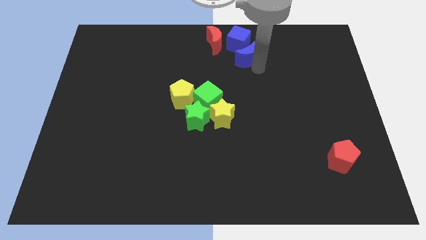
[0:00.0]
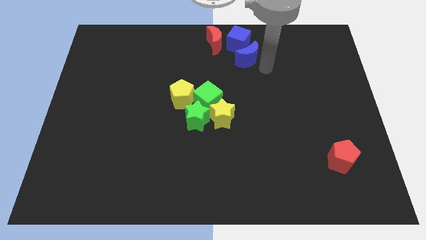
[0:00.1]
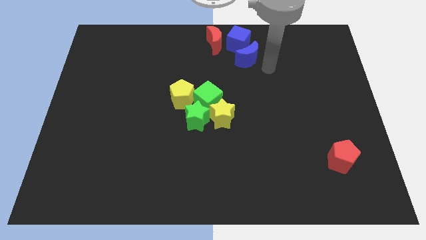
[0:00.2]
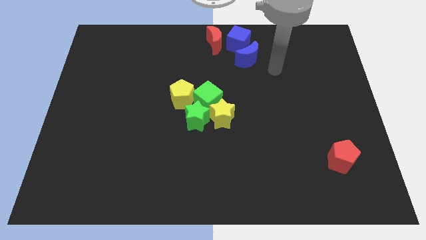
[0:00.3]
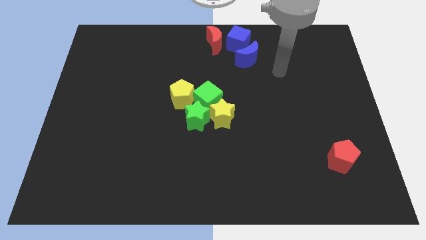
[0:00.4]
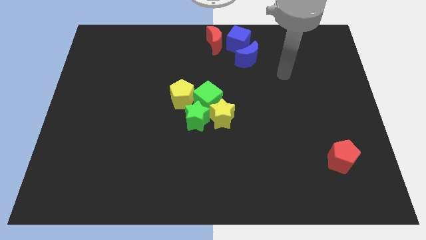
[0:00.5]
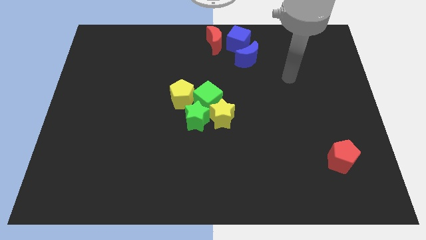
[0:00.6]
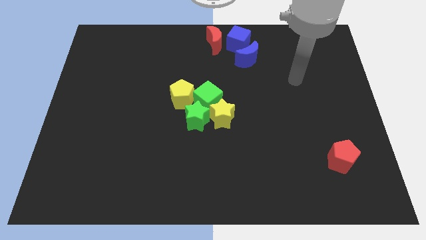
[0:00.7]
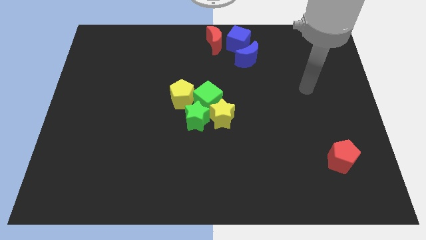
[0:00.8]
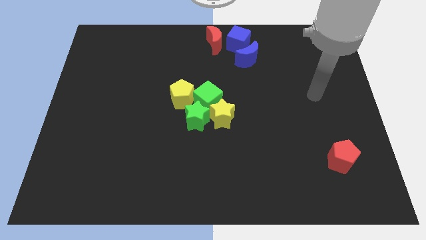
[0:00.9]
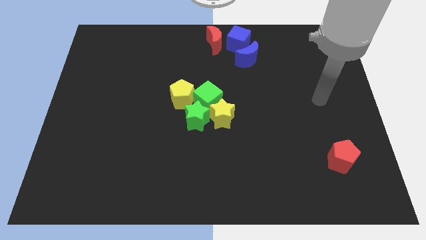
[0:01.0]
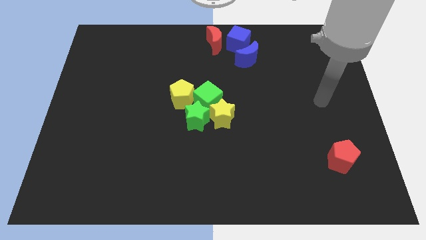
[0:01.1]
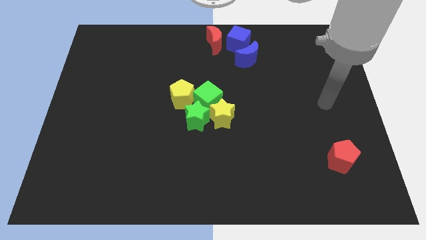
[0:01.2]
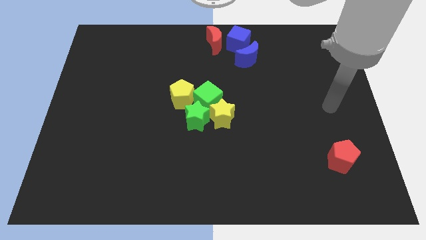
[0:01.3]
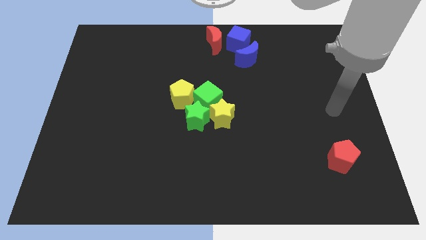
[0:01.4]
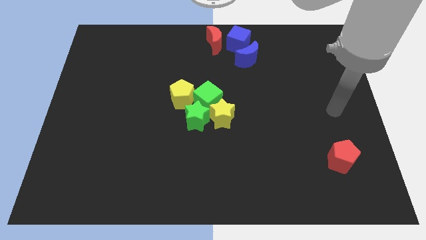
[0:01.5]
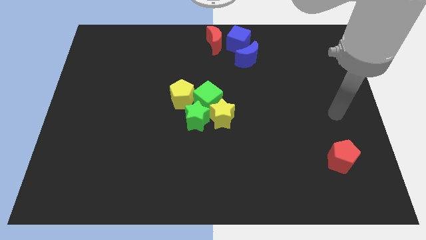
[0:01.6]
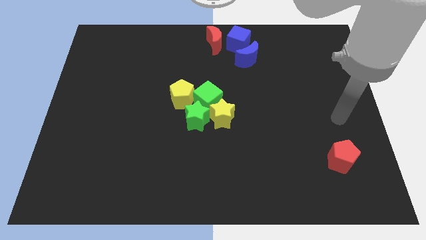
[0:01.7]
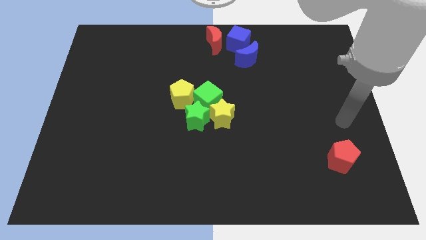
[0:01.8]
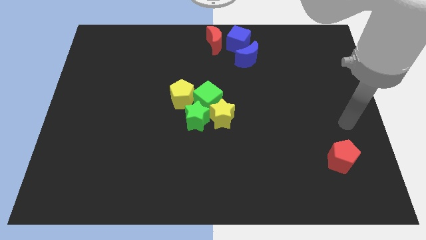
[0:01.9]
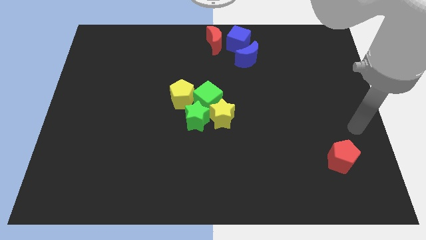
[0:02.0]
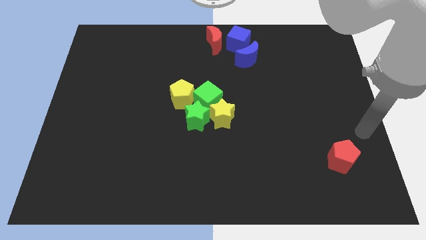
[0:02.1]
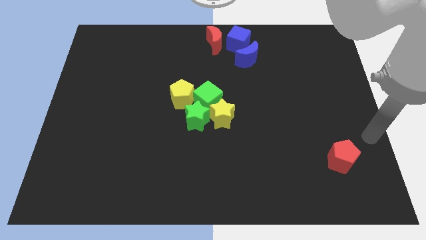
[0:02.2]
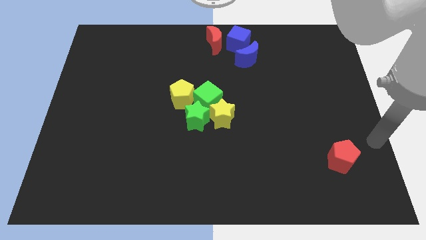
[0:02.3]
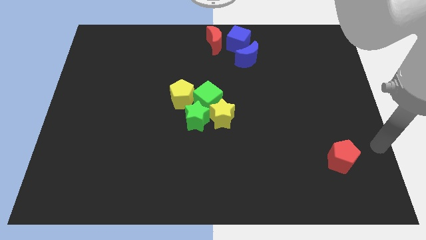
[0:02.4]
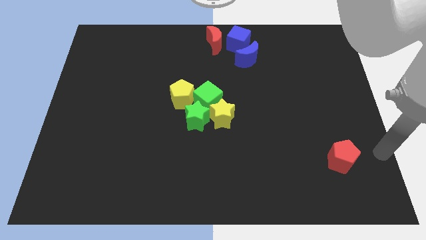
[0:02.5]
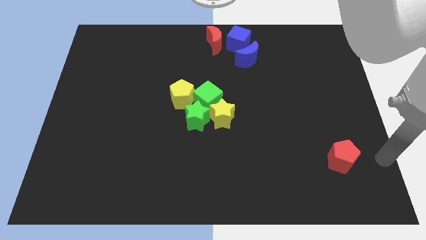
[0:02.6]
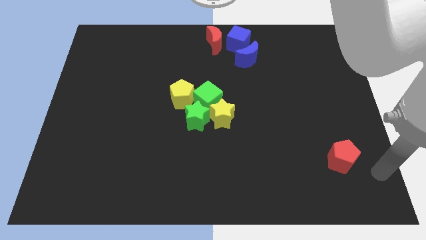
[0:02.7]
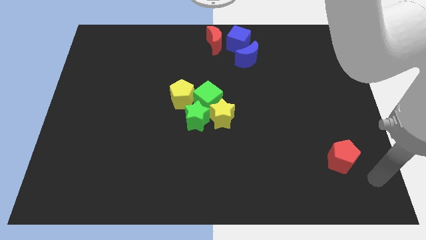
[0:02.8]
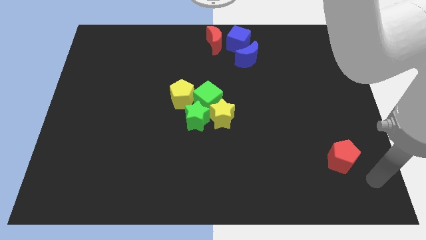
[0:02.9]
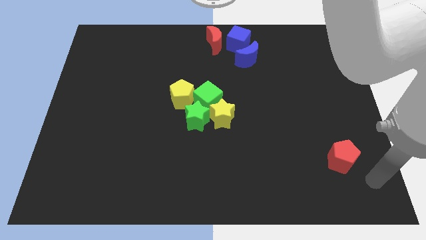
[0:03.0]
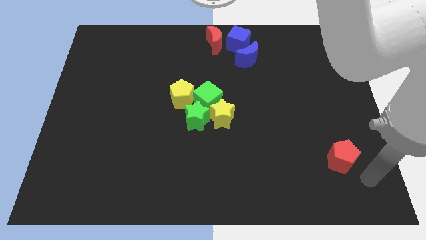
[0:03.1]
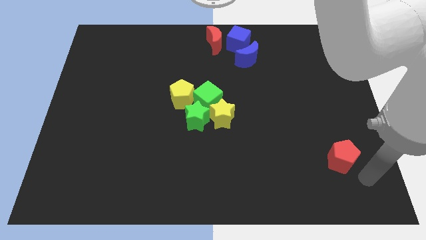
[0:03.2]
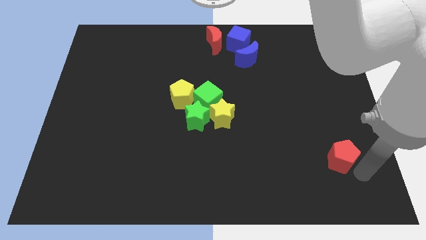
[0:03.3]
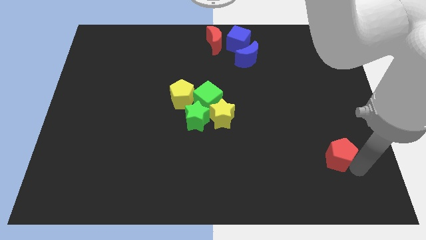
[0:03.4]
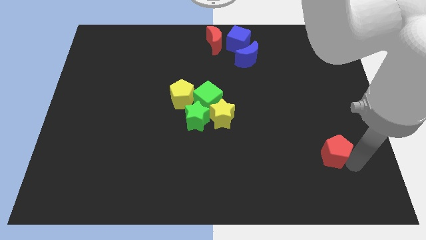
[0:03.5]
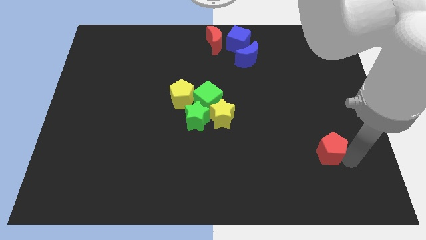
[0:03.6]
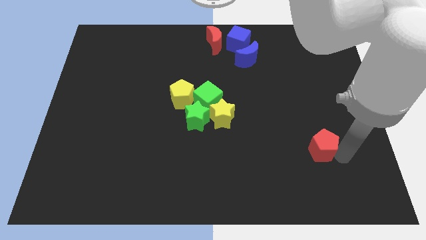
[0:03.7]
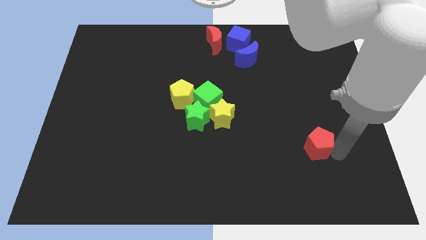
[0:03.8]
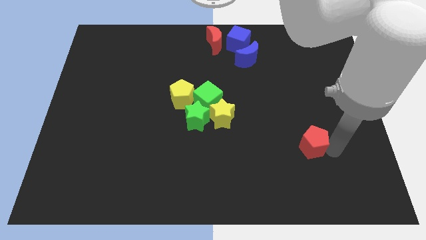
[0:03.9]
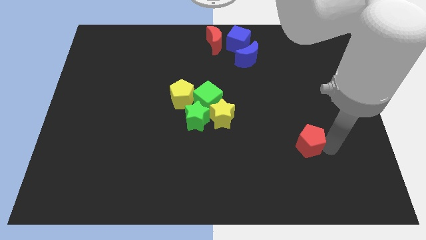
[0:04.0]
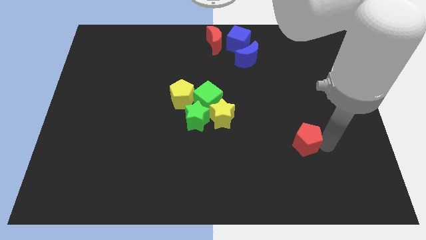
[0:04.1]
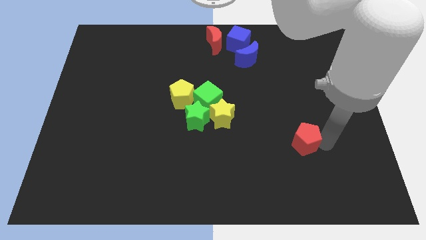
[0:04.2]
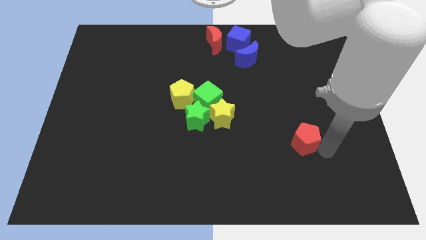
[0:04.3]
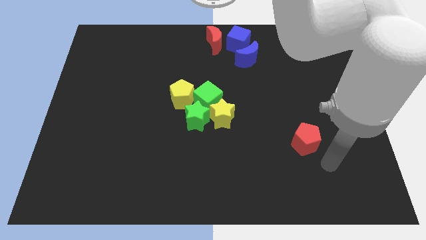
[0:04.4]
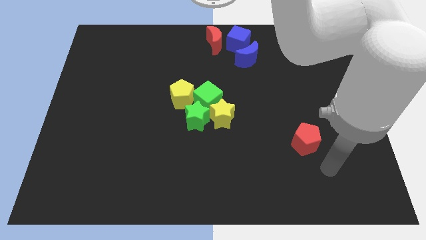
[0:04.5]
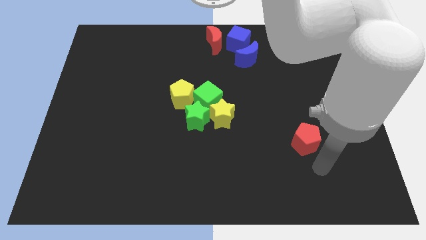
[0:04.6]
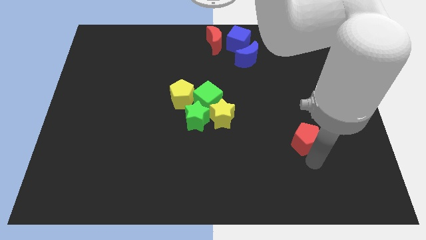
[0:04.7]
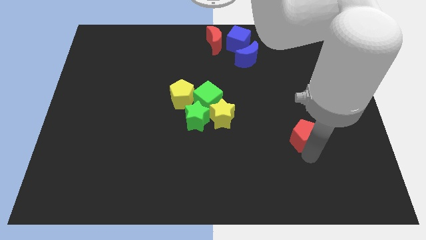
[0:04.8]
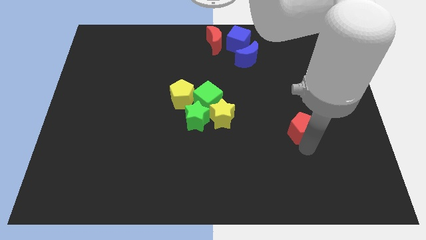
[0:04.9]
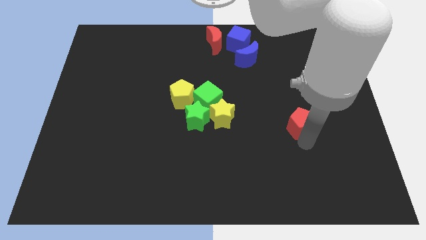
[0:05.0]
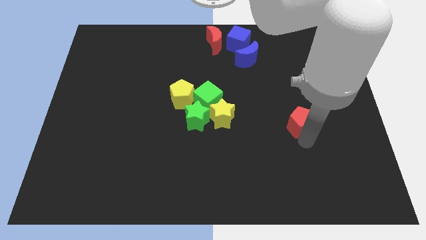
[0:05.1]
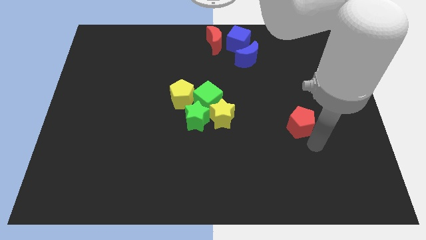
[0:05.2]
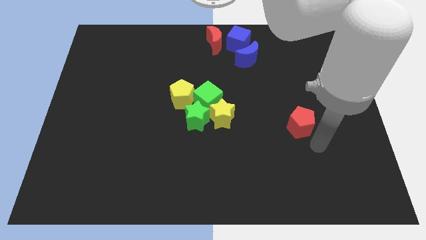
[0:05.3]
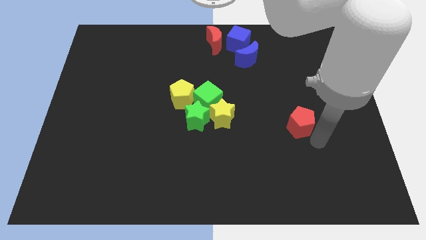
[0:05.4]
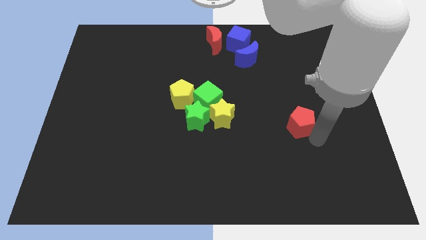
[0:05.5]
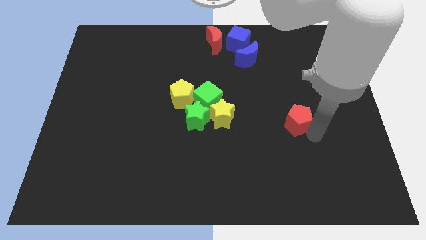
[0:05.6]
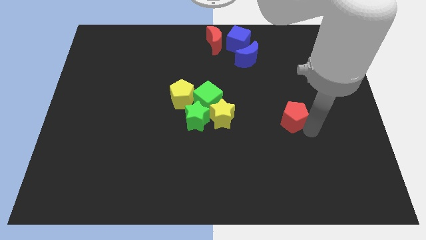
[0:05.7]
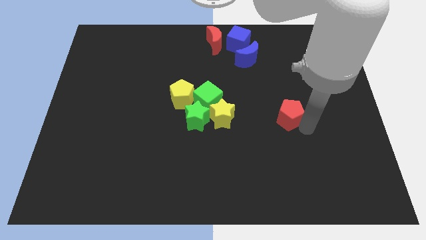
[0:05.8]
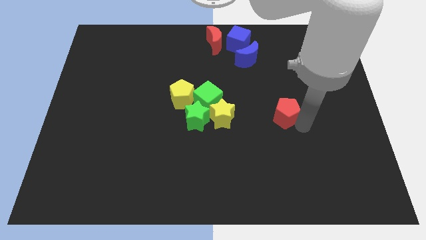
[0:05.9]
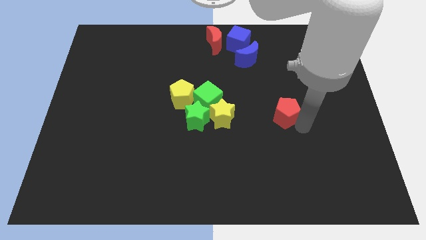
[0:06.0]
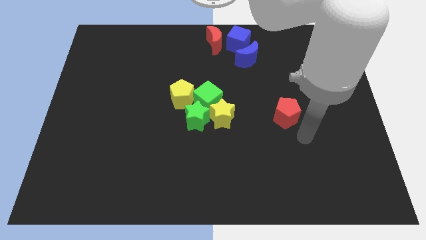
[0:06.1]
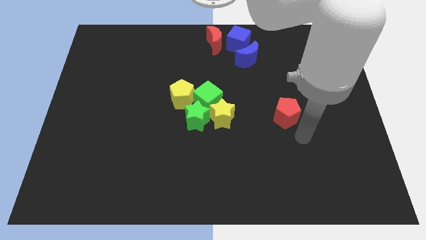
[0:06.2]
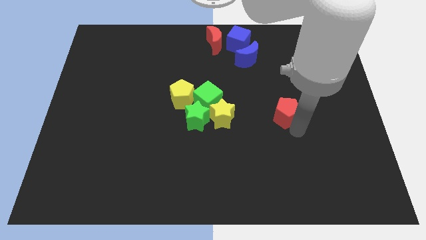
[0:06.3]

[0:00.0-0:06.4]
push the red pentagon towards the left center of the board

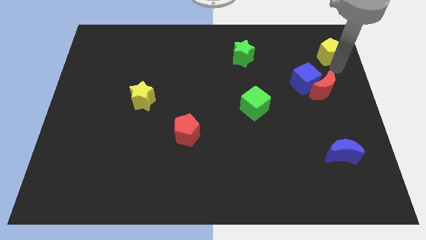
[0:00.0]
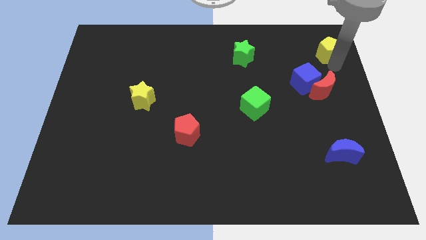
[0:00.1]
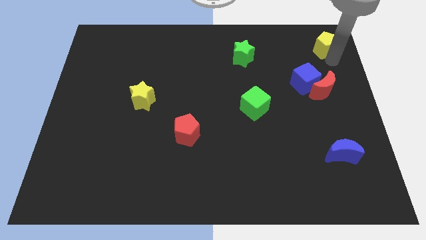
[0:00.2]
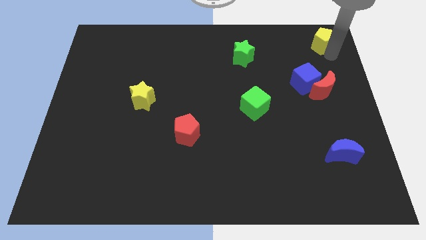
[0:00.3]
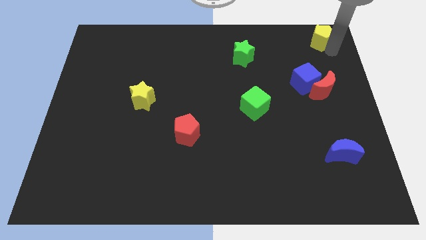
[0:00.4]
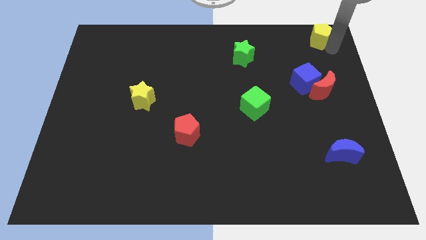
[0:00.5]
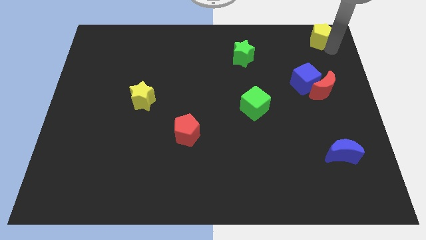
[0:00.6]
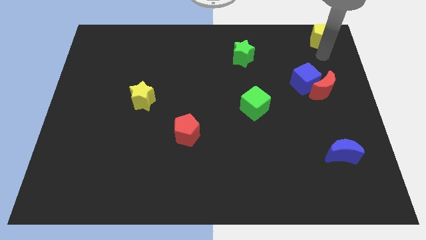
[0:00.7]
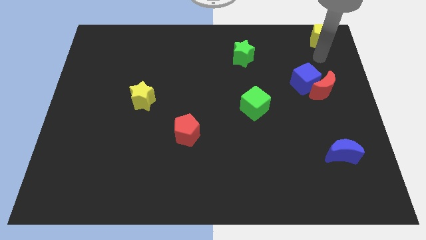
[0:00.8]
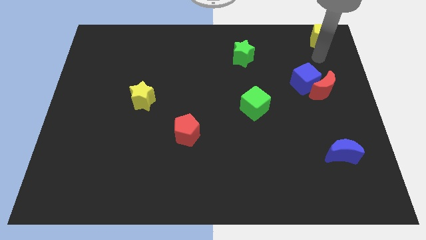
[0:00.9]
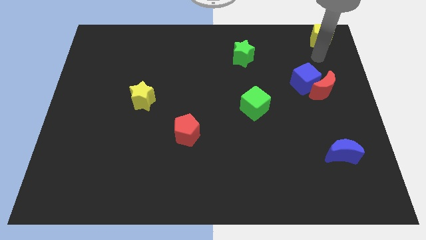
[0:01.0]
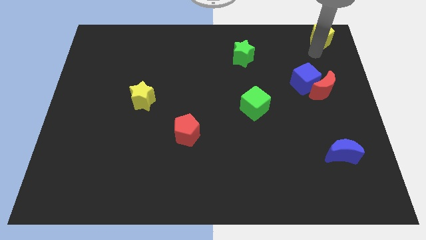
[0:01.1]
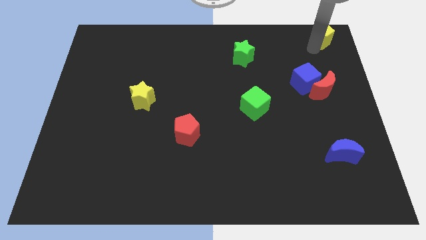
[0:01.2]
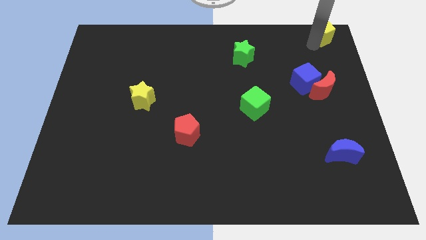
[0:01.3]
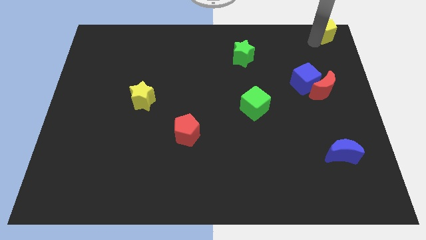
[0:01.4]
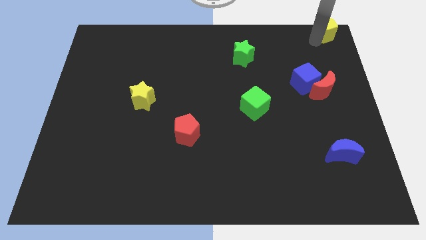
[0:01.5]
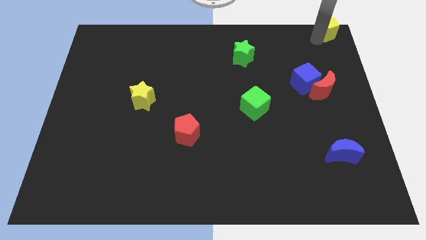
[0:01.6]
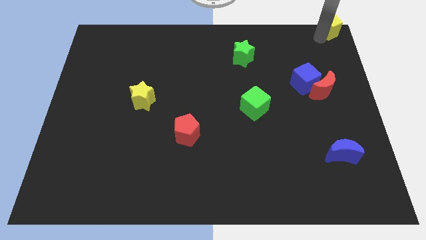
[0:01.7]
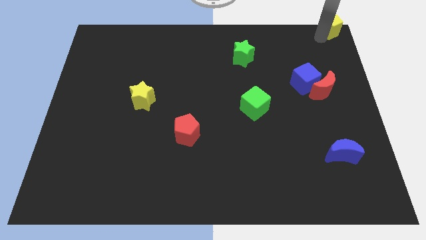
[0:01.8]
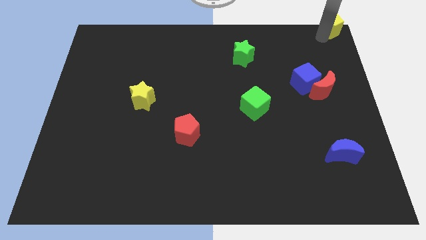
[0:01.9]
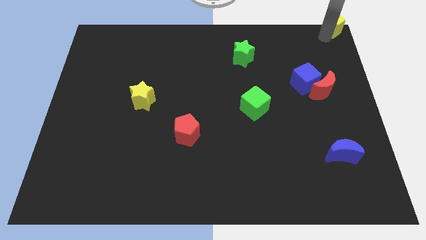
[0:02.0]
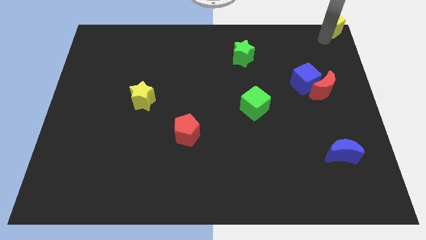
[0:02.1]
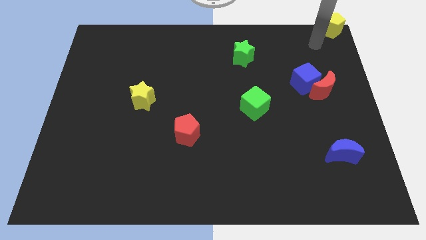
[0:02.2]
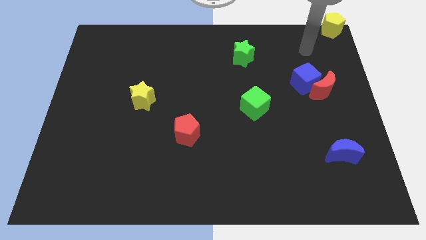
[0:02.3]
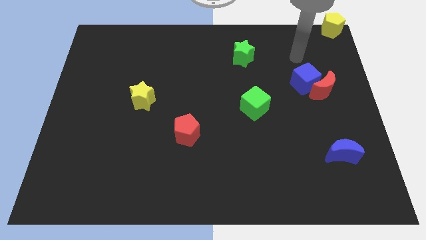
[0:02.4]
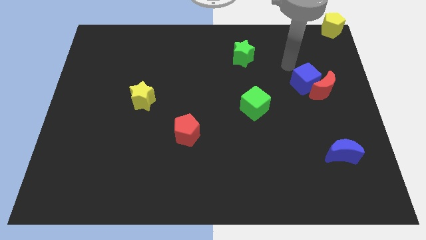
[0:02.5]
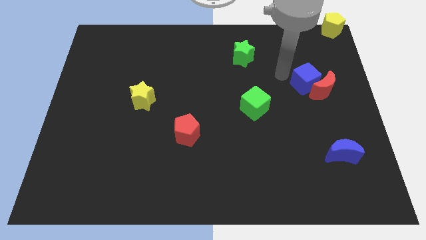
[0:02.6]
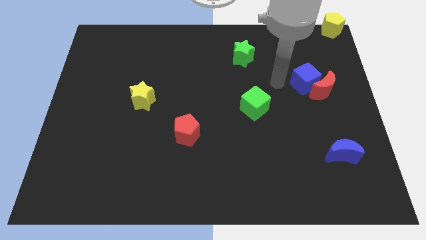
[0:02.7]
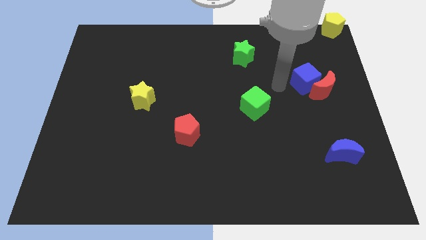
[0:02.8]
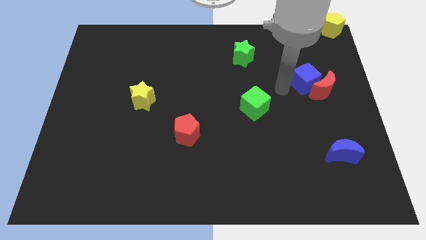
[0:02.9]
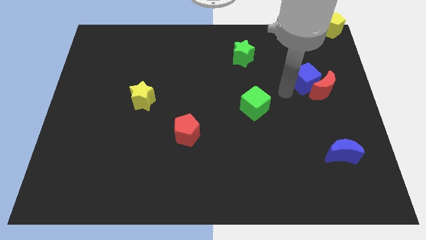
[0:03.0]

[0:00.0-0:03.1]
place the yellow pentagon at the top right corner of the board
